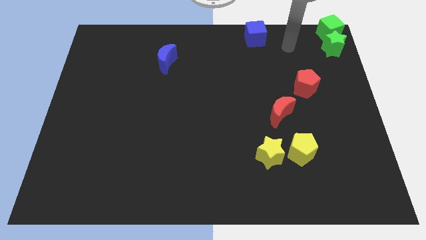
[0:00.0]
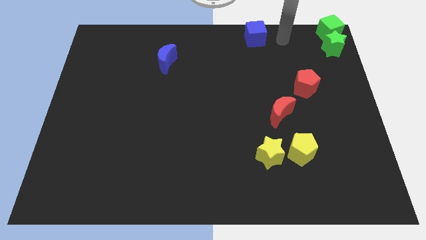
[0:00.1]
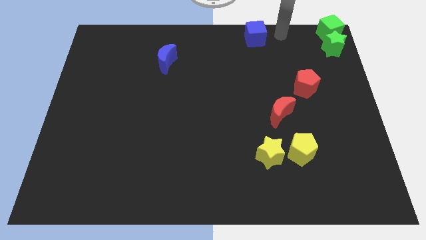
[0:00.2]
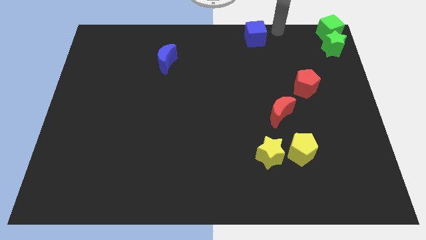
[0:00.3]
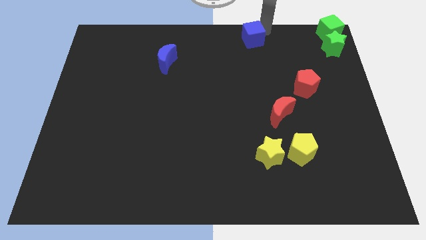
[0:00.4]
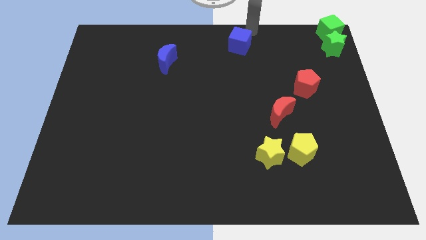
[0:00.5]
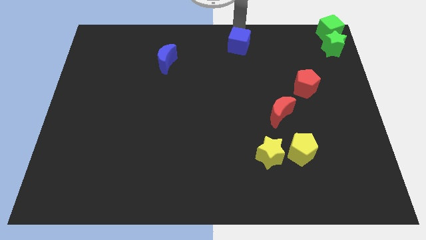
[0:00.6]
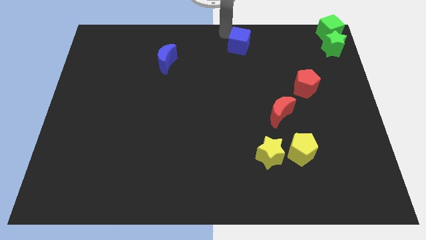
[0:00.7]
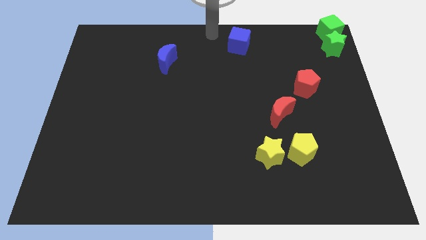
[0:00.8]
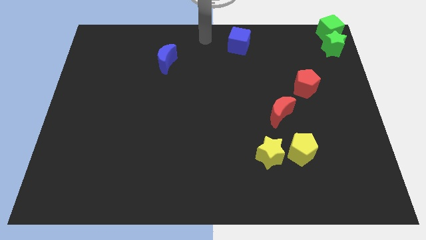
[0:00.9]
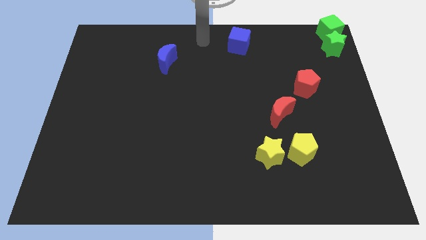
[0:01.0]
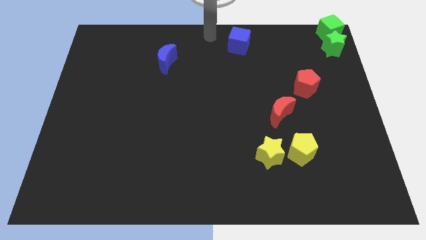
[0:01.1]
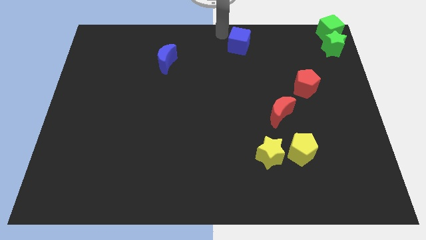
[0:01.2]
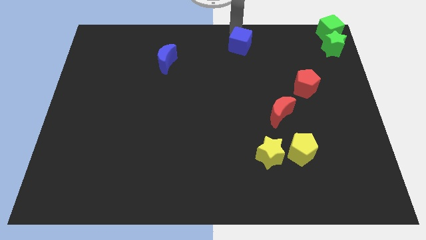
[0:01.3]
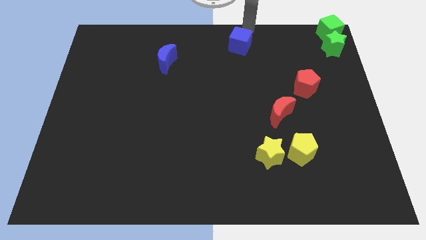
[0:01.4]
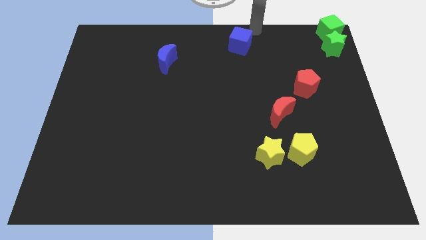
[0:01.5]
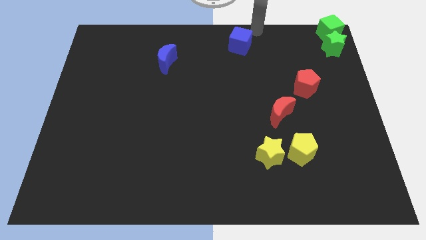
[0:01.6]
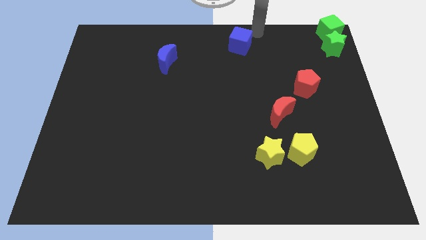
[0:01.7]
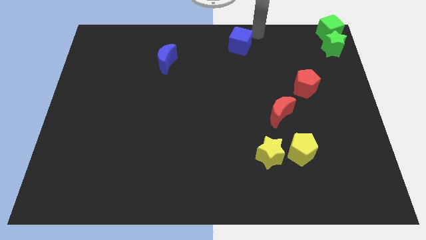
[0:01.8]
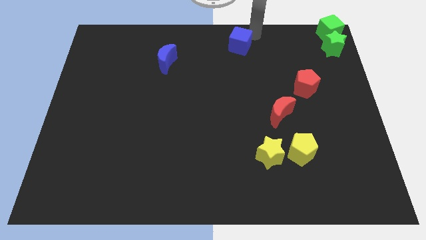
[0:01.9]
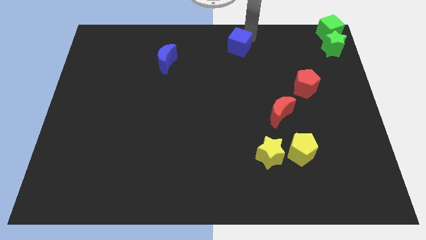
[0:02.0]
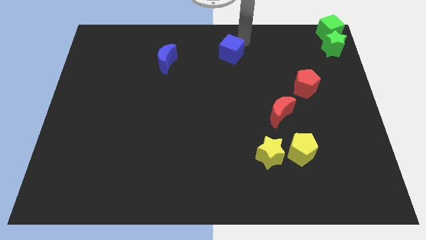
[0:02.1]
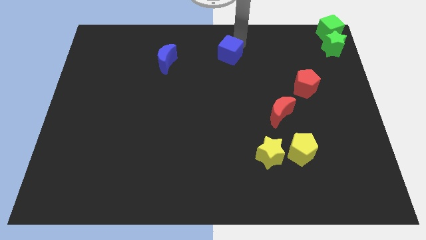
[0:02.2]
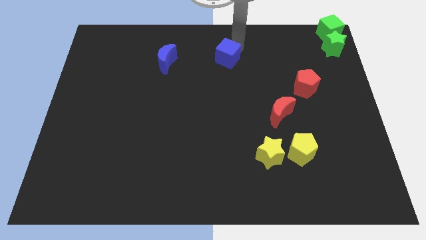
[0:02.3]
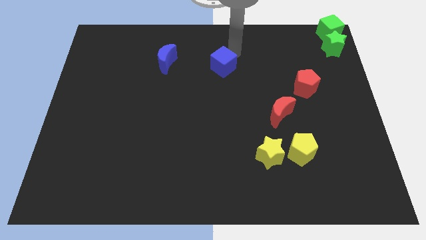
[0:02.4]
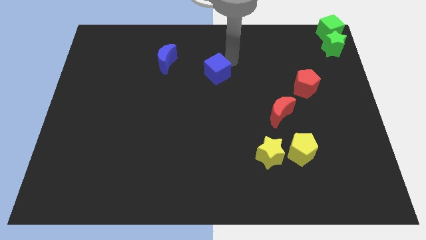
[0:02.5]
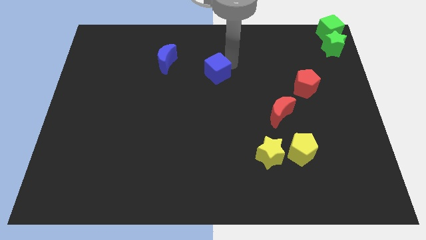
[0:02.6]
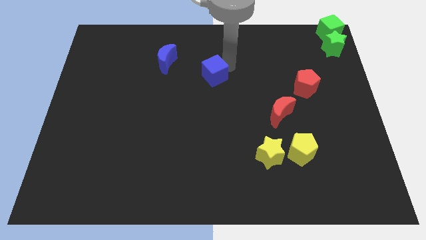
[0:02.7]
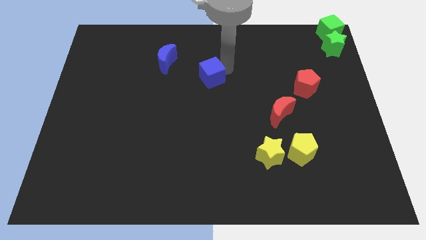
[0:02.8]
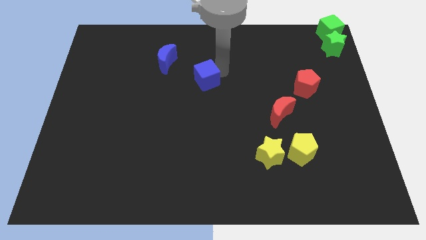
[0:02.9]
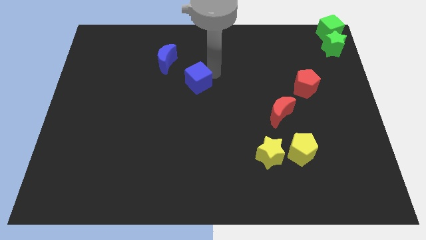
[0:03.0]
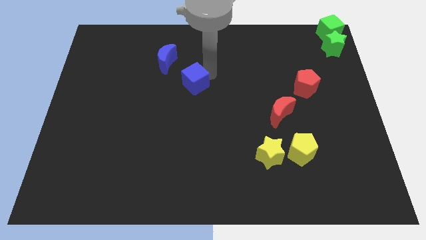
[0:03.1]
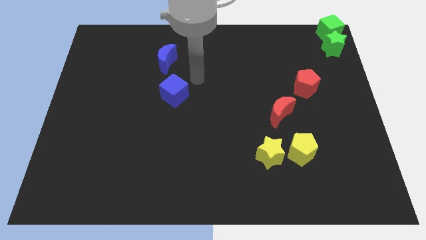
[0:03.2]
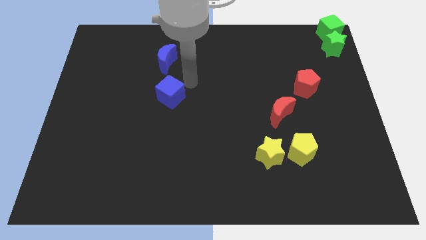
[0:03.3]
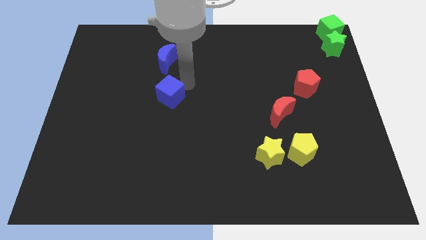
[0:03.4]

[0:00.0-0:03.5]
move the blue cube below the blue crescent

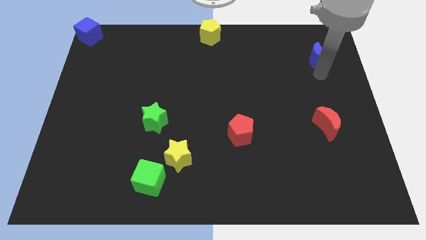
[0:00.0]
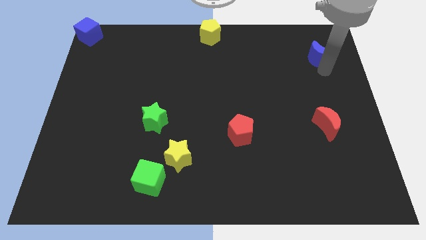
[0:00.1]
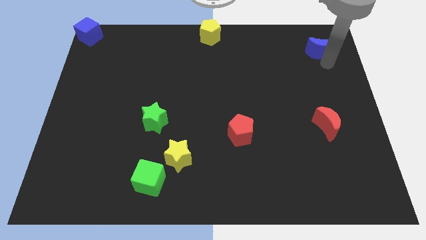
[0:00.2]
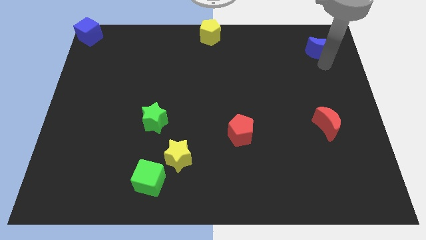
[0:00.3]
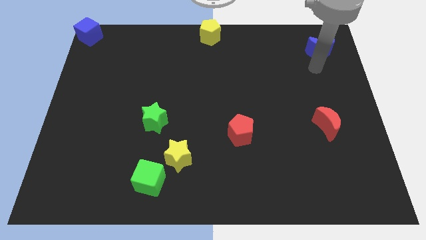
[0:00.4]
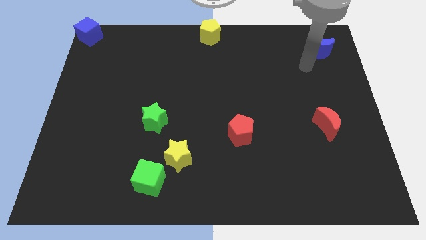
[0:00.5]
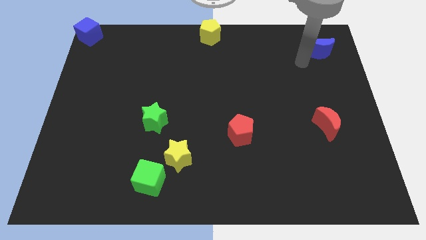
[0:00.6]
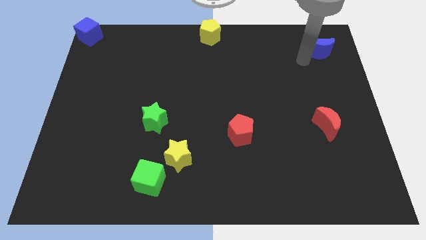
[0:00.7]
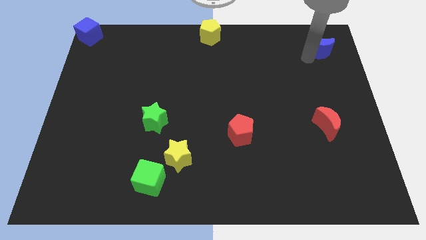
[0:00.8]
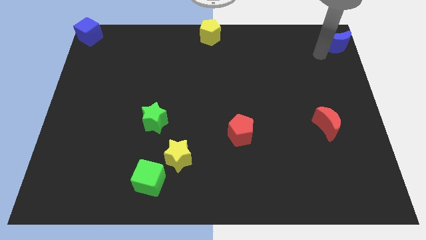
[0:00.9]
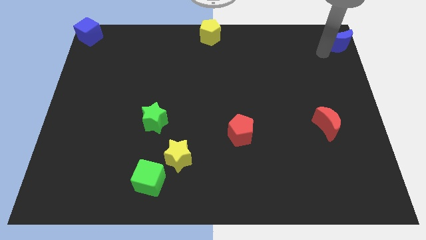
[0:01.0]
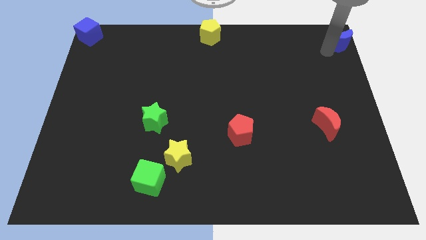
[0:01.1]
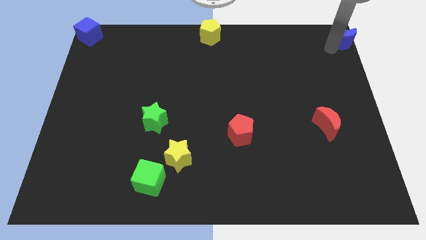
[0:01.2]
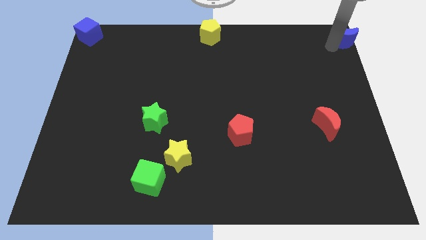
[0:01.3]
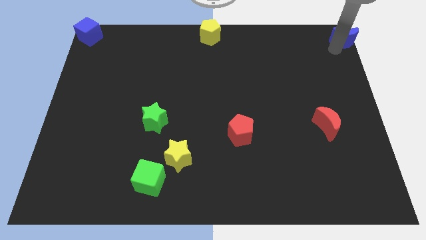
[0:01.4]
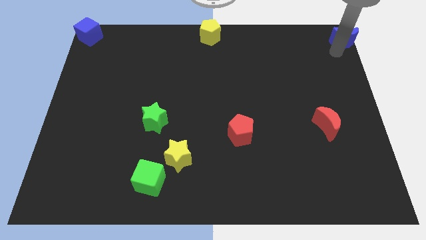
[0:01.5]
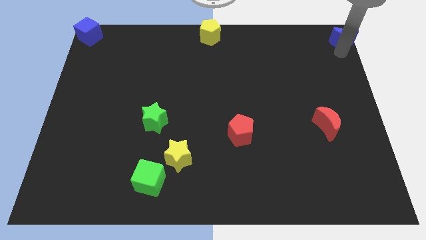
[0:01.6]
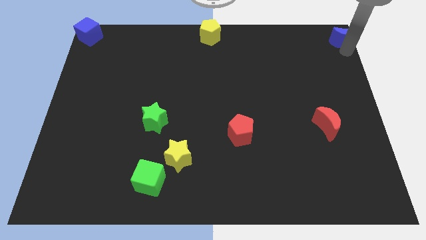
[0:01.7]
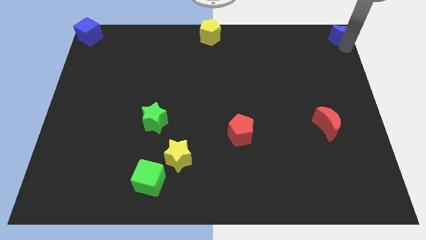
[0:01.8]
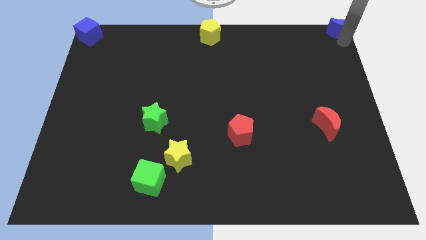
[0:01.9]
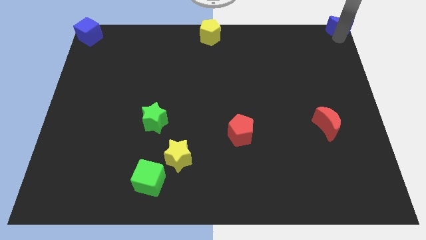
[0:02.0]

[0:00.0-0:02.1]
place blue moon at the top right corner

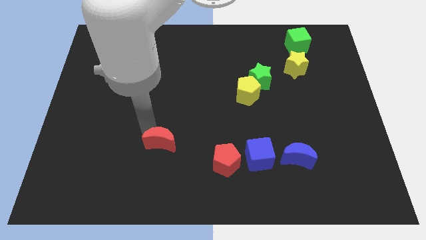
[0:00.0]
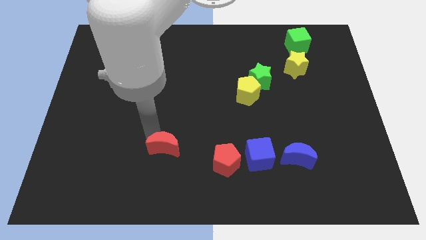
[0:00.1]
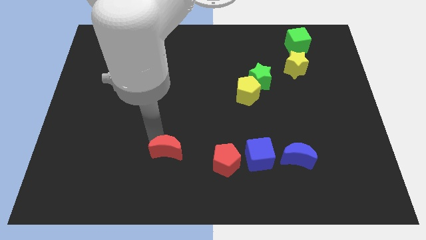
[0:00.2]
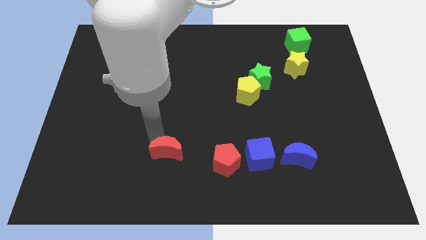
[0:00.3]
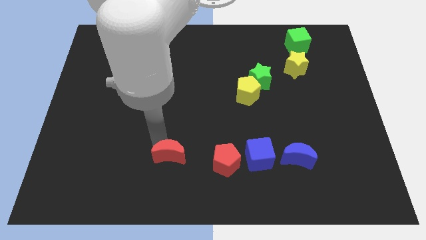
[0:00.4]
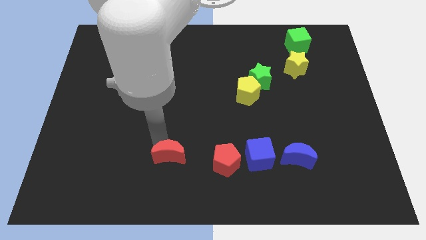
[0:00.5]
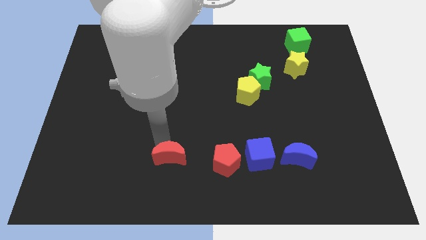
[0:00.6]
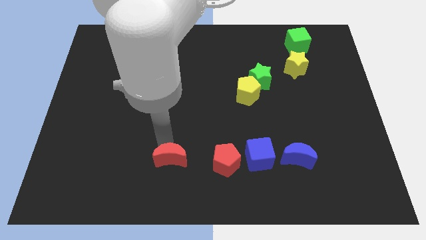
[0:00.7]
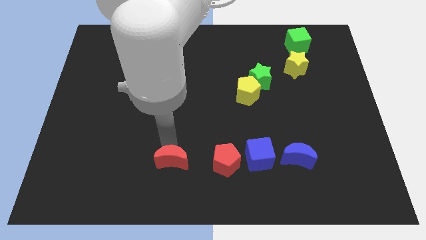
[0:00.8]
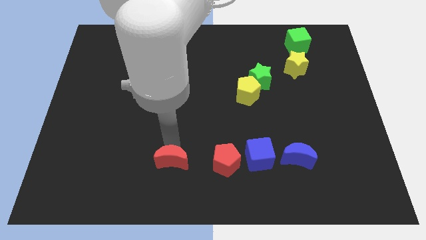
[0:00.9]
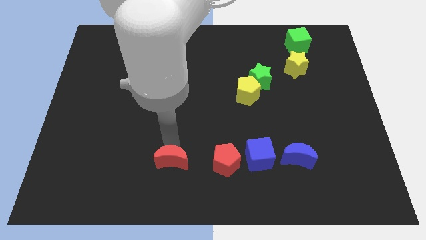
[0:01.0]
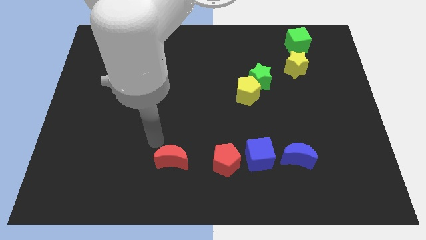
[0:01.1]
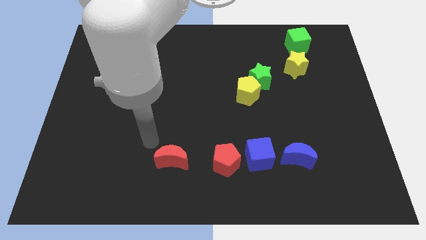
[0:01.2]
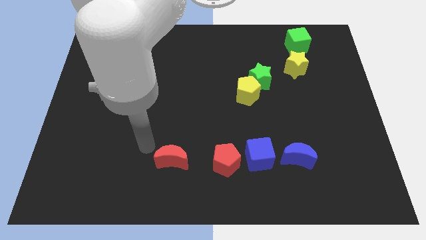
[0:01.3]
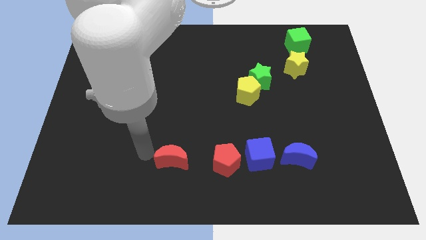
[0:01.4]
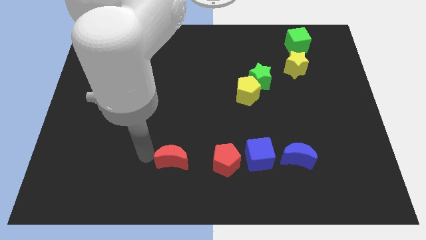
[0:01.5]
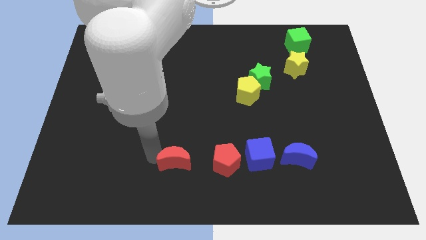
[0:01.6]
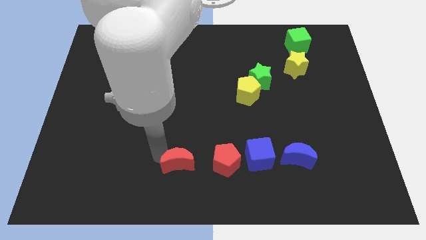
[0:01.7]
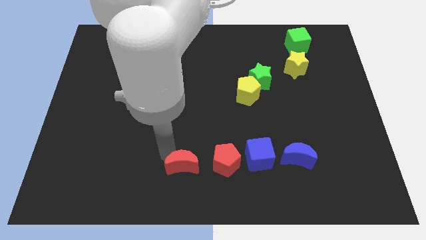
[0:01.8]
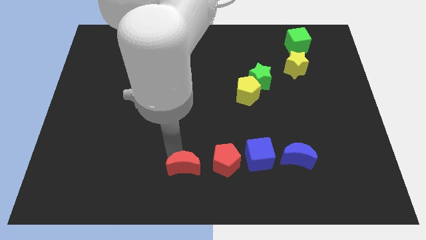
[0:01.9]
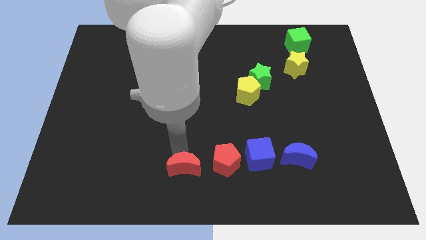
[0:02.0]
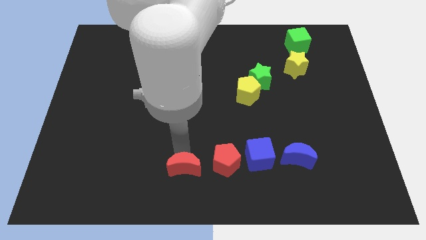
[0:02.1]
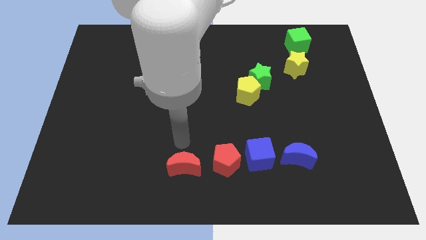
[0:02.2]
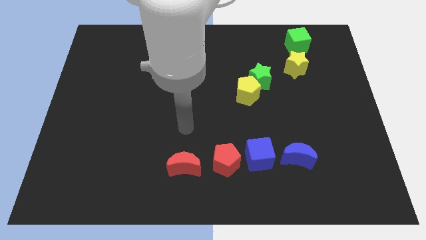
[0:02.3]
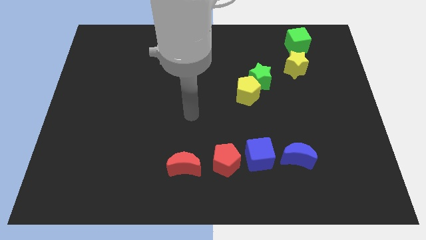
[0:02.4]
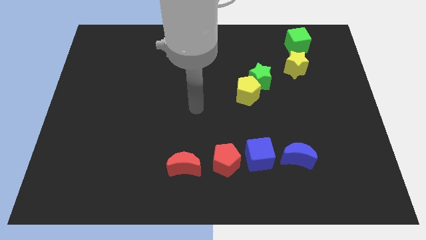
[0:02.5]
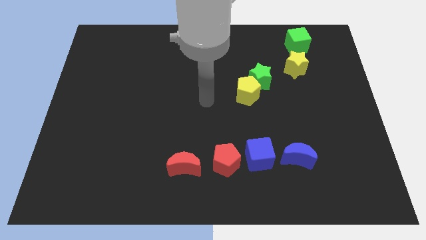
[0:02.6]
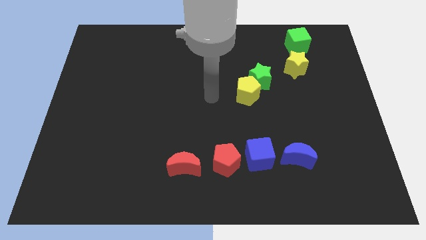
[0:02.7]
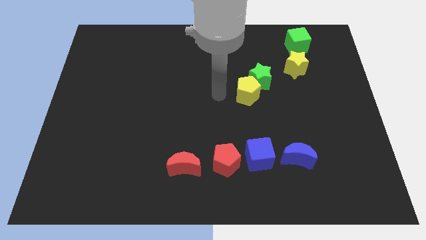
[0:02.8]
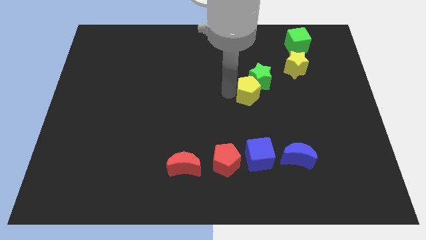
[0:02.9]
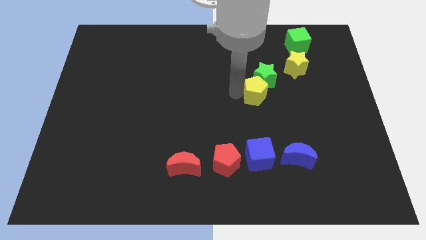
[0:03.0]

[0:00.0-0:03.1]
move the red moon close to the red pentagon

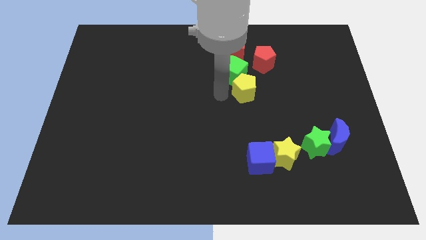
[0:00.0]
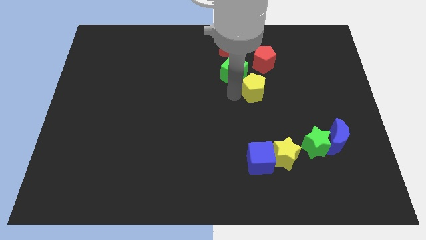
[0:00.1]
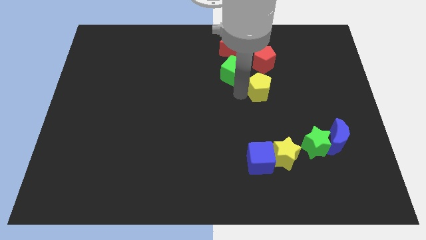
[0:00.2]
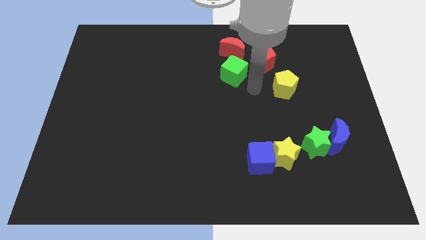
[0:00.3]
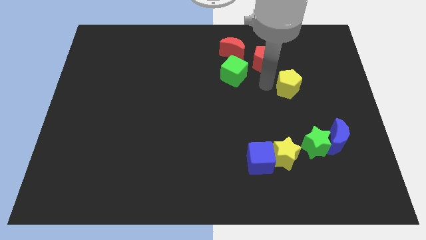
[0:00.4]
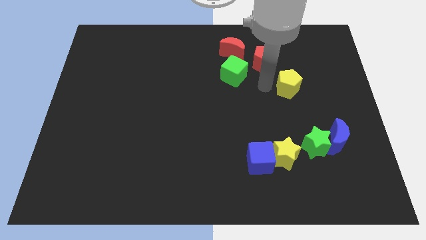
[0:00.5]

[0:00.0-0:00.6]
push the yellow pentagon to the bottom right of the red pentagon
